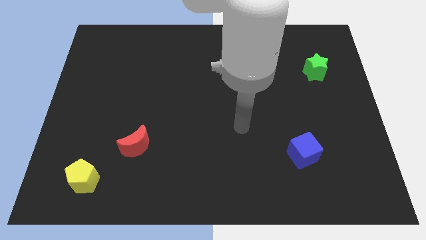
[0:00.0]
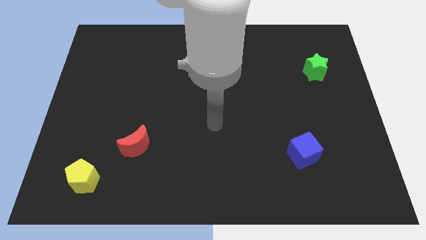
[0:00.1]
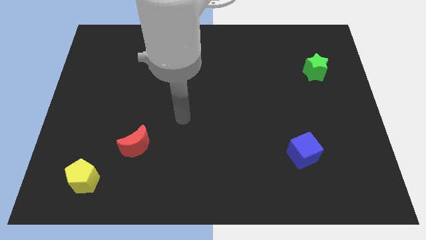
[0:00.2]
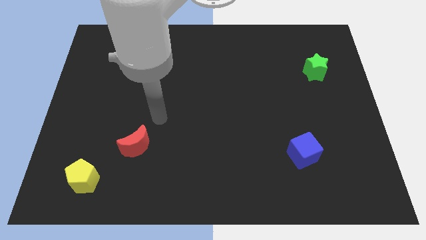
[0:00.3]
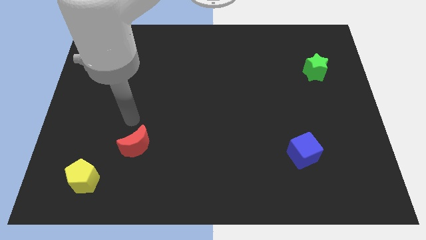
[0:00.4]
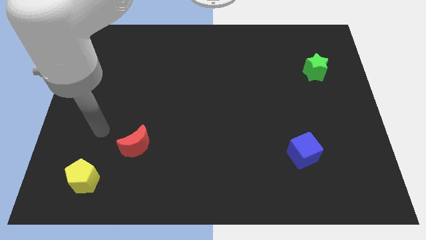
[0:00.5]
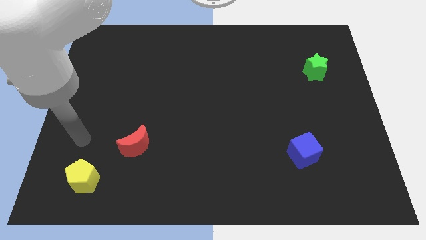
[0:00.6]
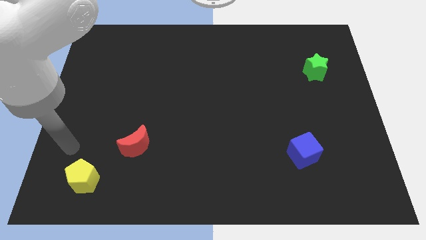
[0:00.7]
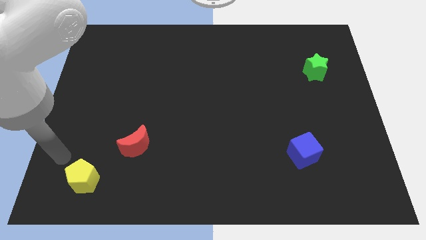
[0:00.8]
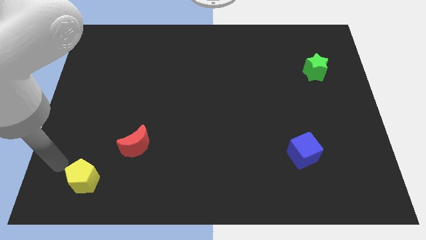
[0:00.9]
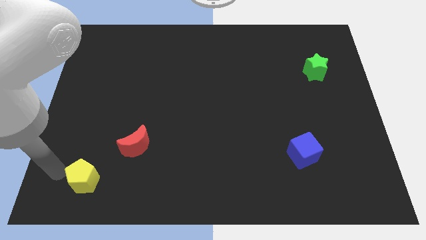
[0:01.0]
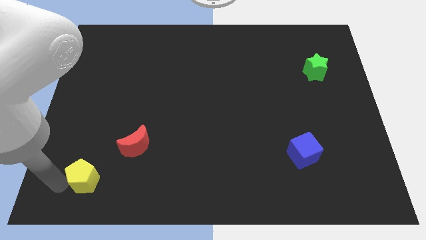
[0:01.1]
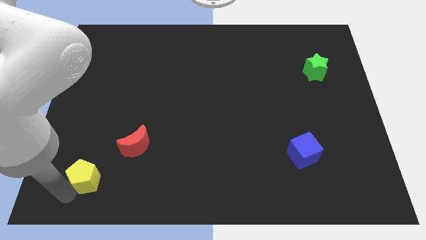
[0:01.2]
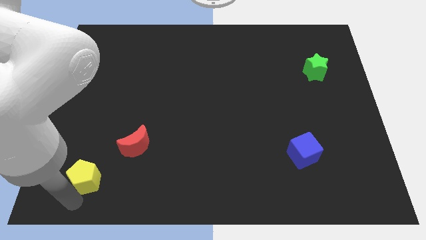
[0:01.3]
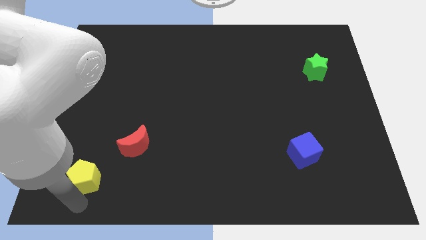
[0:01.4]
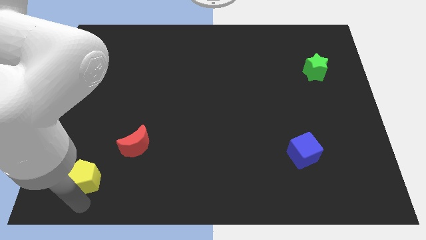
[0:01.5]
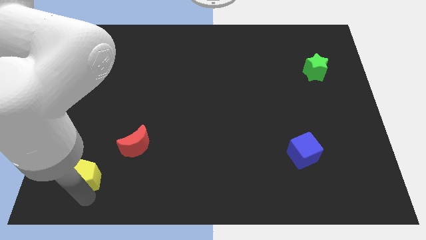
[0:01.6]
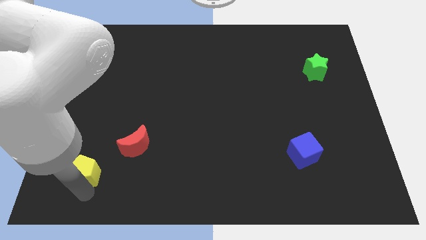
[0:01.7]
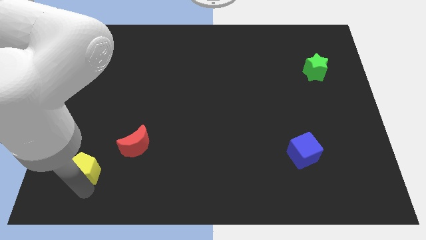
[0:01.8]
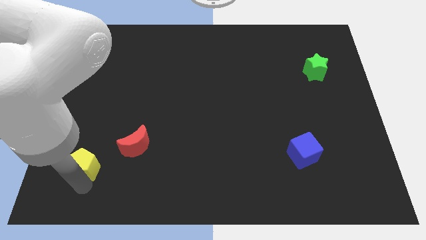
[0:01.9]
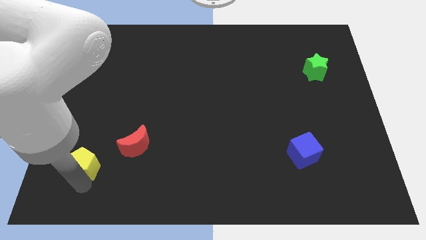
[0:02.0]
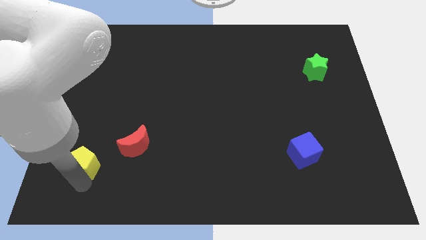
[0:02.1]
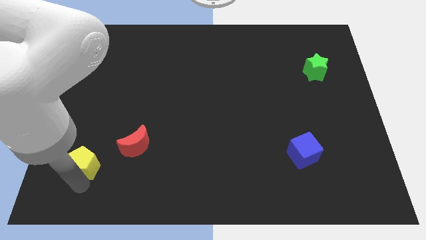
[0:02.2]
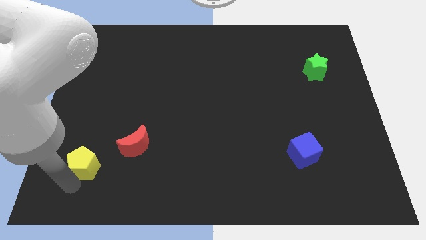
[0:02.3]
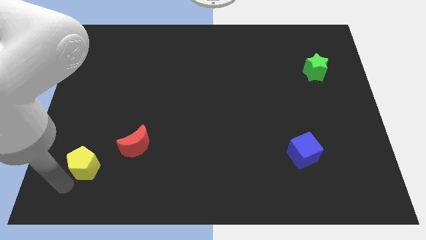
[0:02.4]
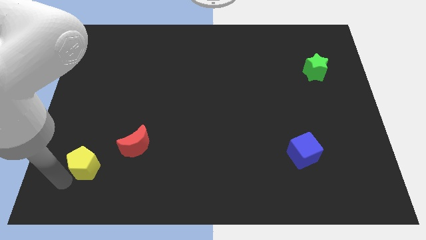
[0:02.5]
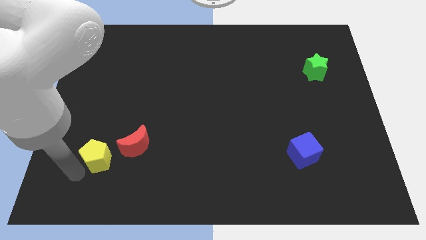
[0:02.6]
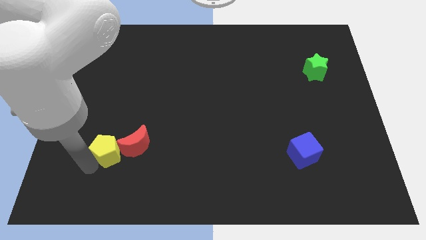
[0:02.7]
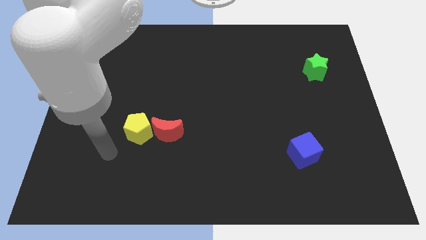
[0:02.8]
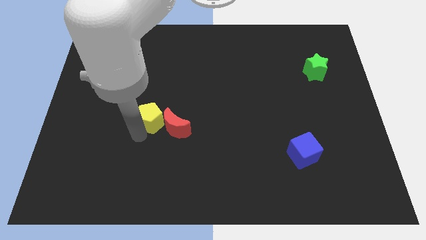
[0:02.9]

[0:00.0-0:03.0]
put the pentagon to the red block

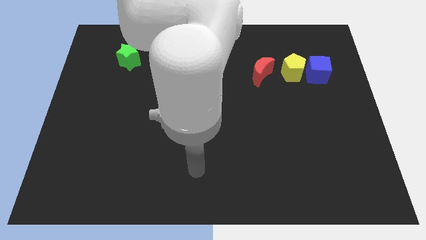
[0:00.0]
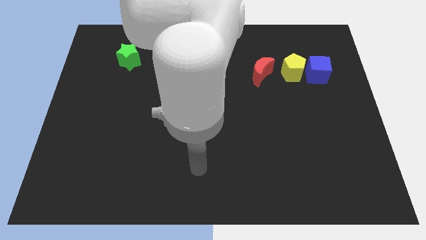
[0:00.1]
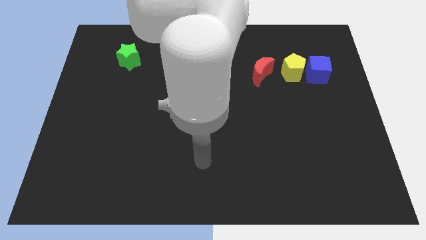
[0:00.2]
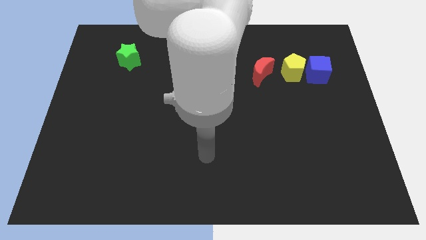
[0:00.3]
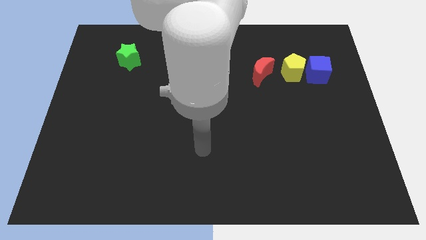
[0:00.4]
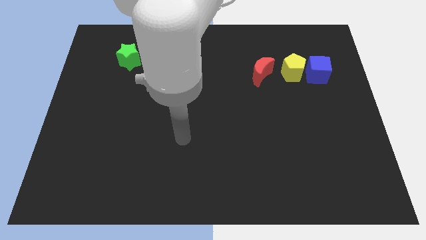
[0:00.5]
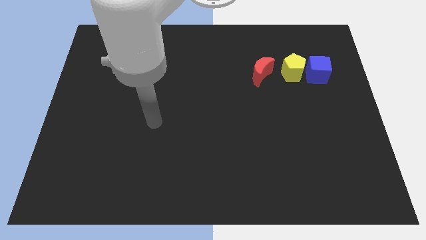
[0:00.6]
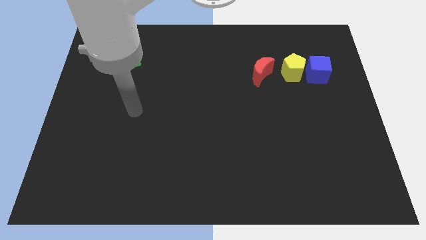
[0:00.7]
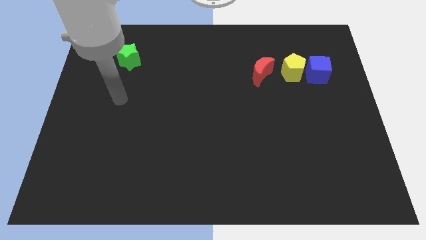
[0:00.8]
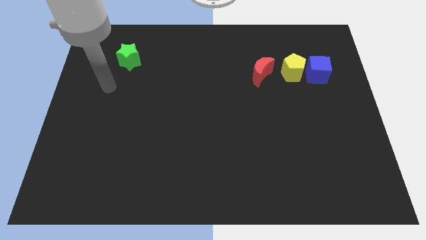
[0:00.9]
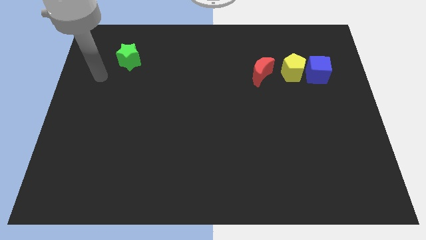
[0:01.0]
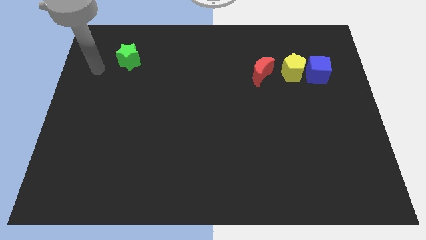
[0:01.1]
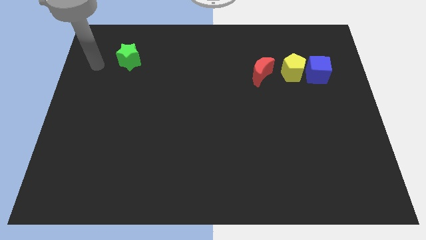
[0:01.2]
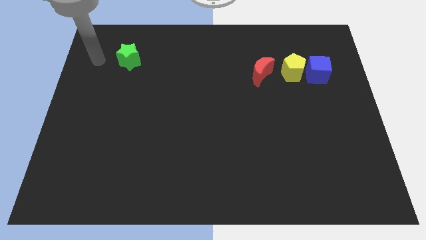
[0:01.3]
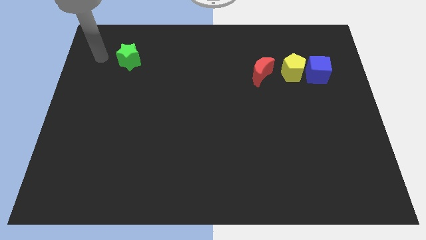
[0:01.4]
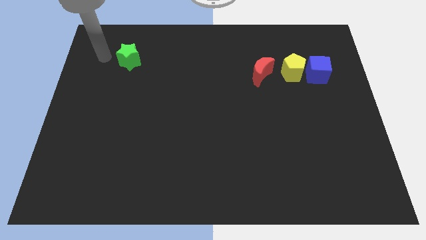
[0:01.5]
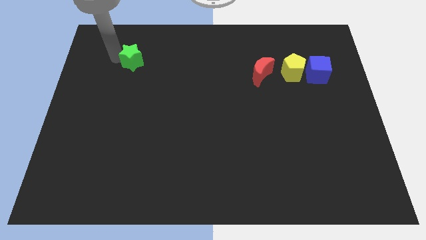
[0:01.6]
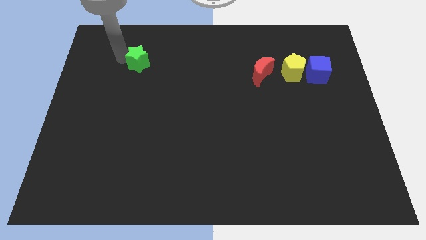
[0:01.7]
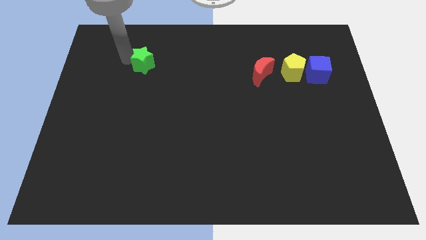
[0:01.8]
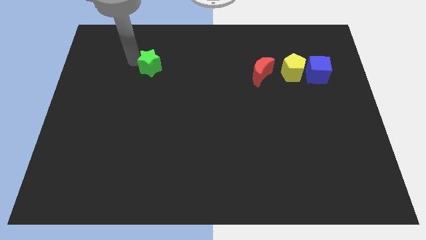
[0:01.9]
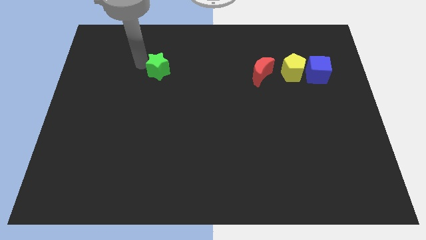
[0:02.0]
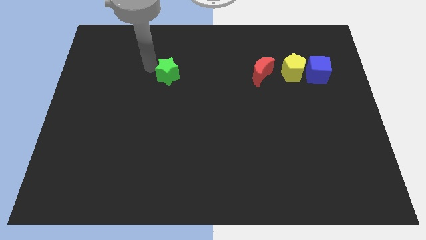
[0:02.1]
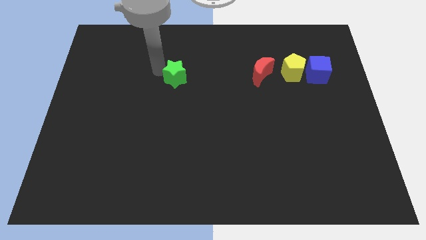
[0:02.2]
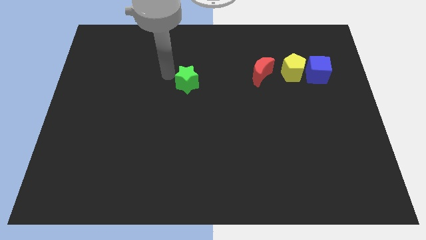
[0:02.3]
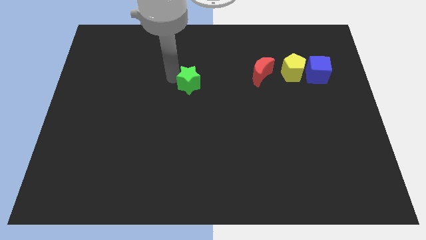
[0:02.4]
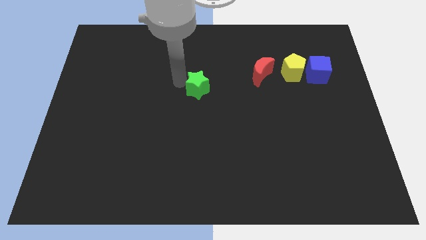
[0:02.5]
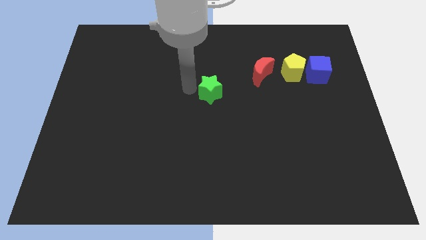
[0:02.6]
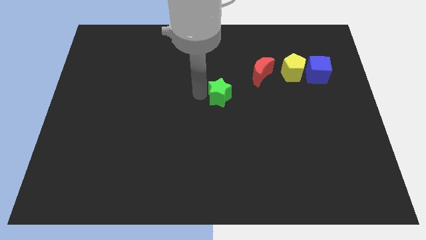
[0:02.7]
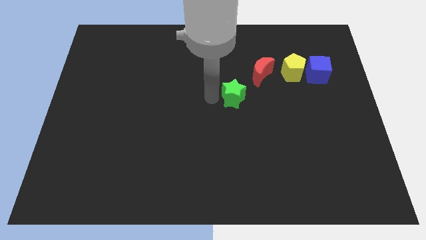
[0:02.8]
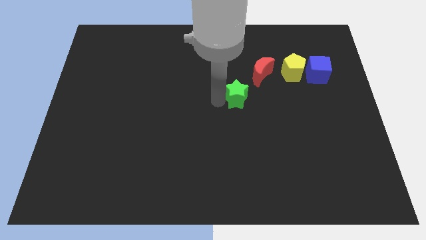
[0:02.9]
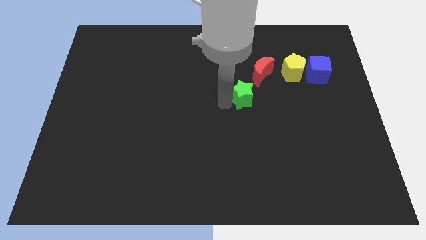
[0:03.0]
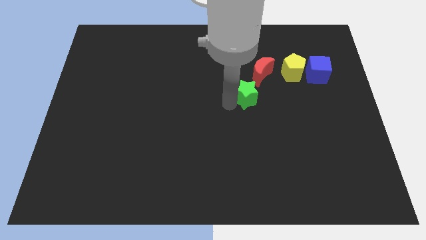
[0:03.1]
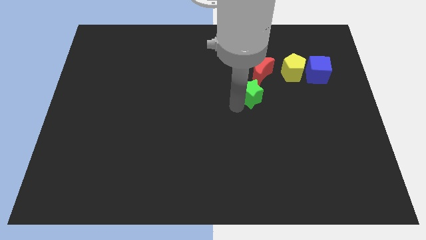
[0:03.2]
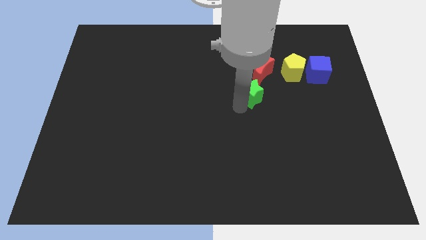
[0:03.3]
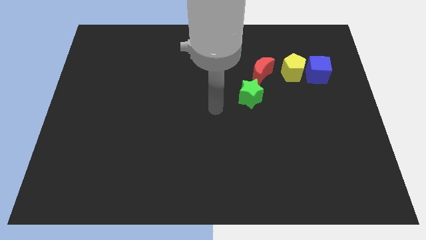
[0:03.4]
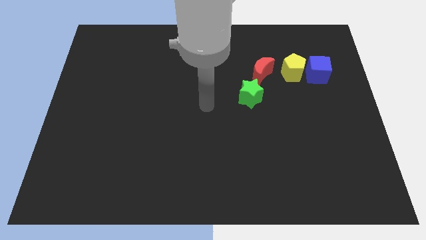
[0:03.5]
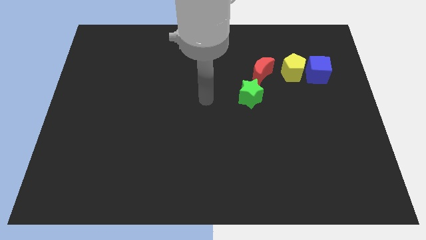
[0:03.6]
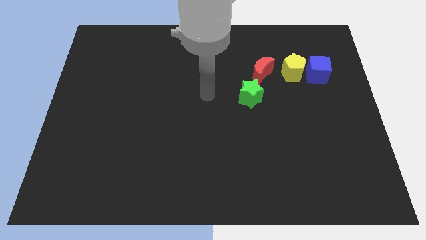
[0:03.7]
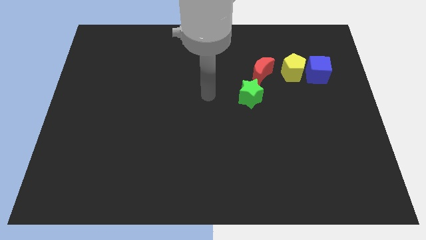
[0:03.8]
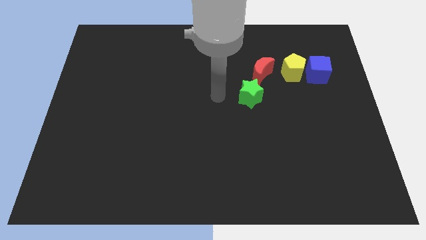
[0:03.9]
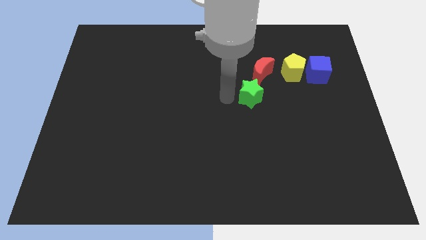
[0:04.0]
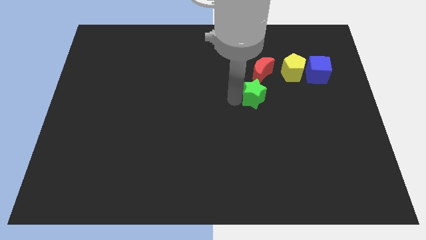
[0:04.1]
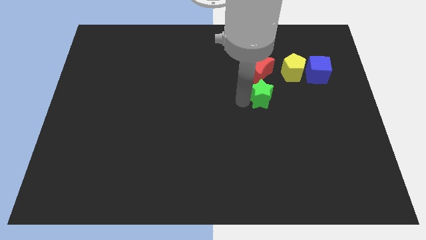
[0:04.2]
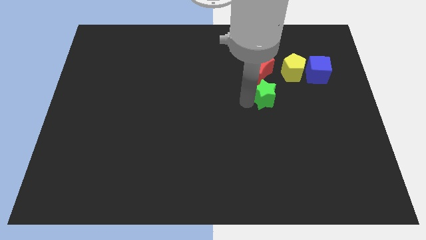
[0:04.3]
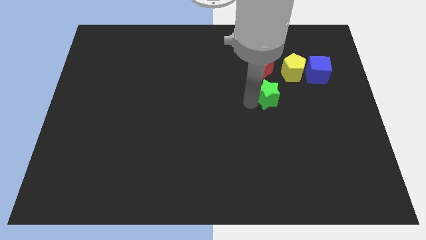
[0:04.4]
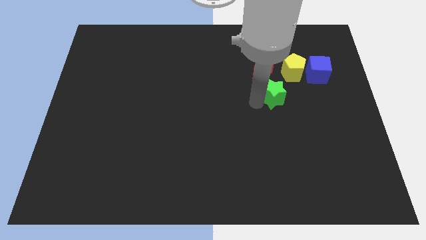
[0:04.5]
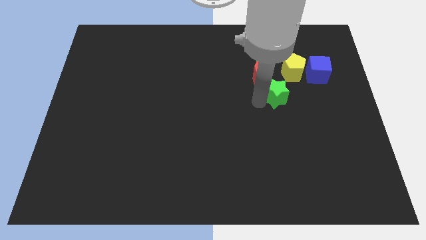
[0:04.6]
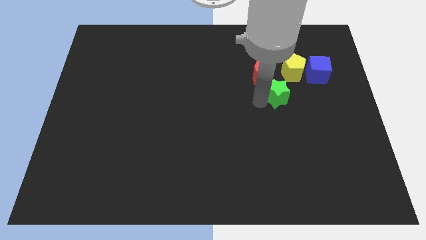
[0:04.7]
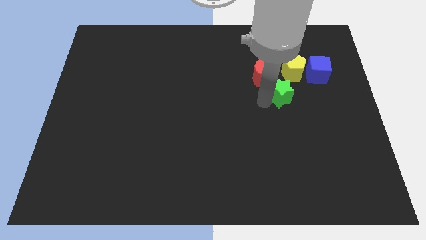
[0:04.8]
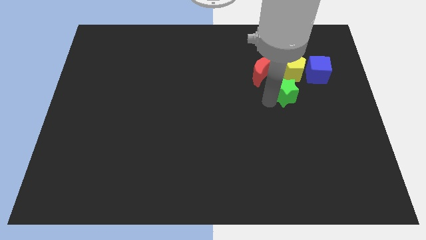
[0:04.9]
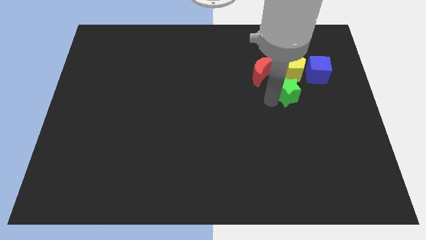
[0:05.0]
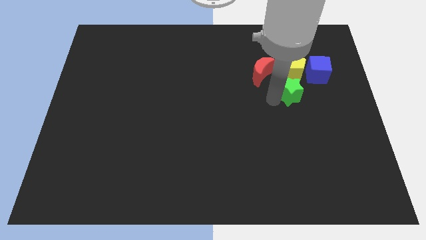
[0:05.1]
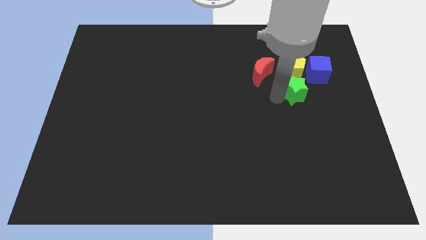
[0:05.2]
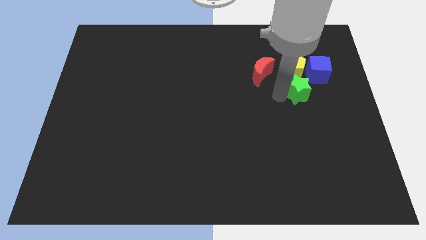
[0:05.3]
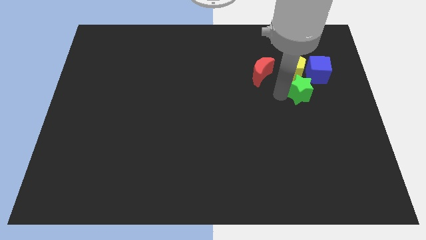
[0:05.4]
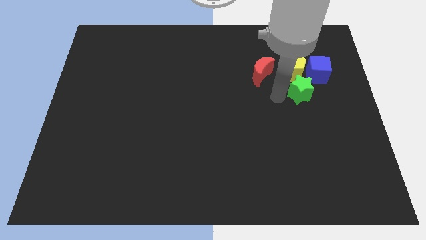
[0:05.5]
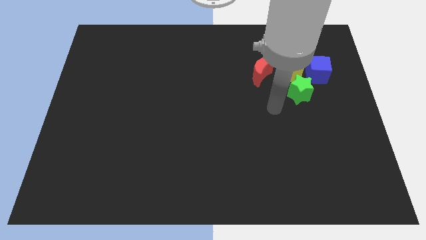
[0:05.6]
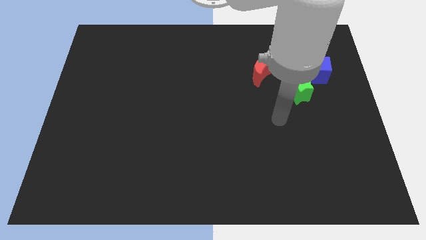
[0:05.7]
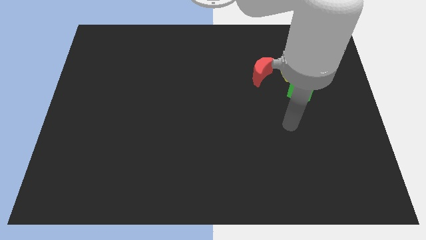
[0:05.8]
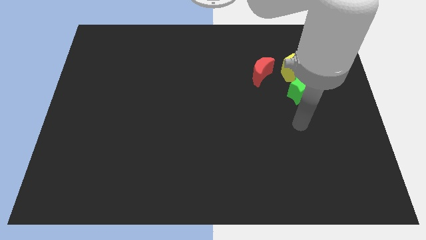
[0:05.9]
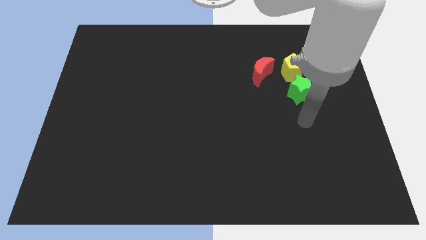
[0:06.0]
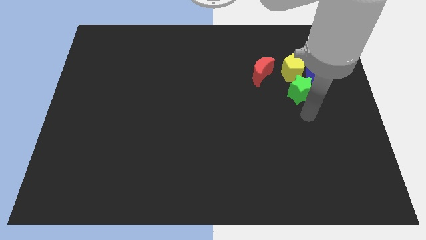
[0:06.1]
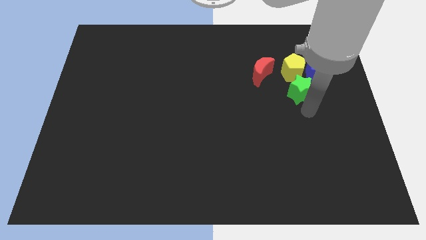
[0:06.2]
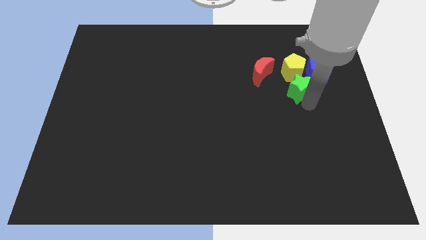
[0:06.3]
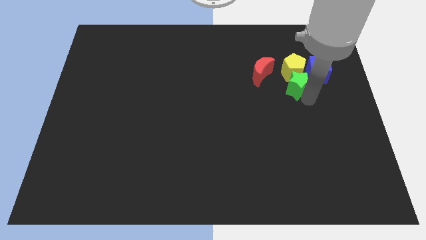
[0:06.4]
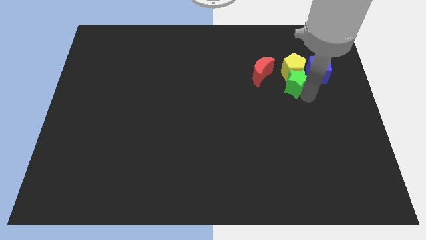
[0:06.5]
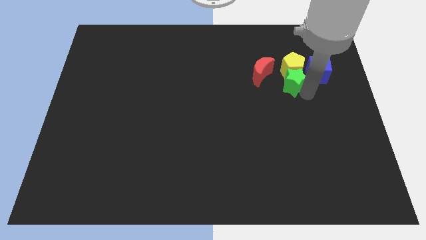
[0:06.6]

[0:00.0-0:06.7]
push the green block to the yellow pentagon
